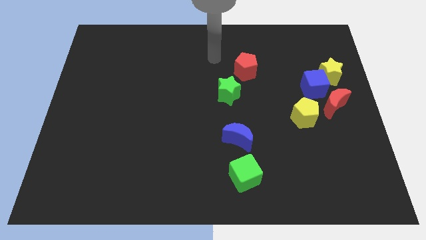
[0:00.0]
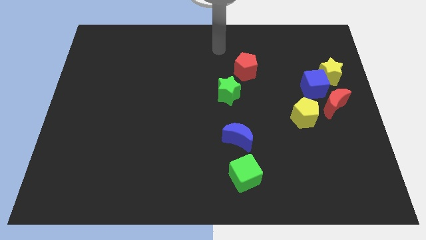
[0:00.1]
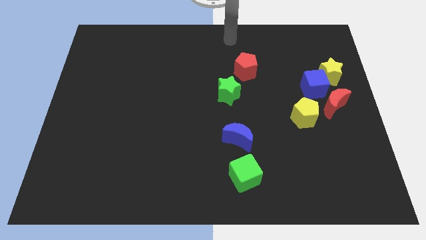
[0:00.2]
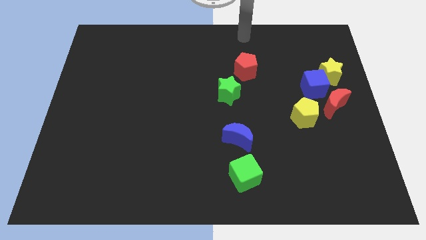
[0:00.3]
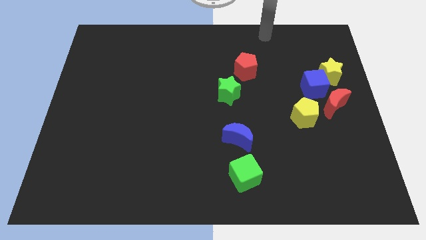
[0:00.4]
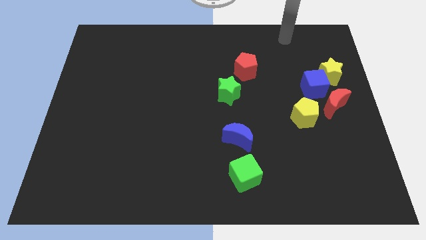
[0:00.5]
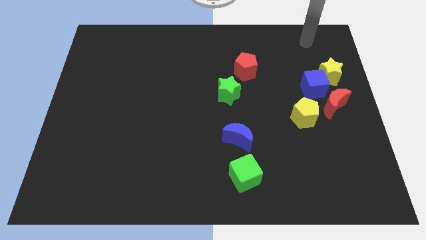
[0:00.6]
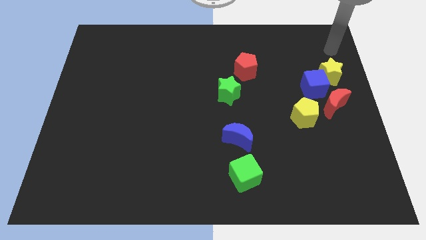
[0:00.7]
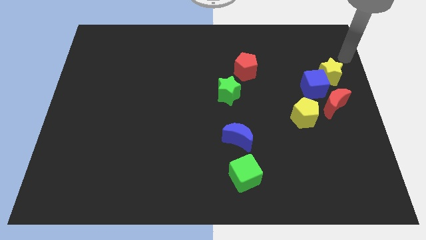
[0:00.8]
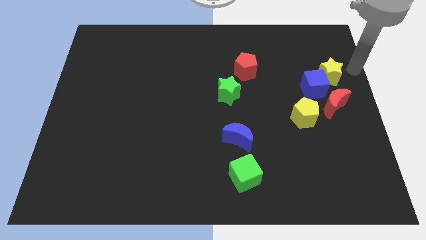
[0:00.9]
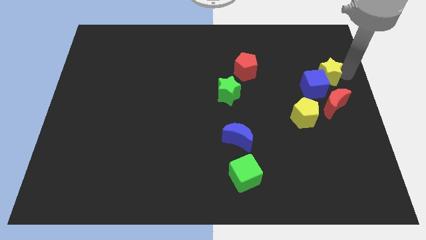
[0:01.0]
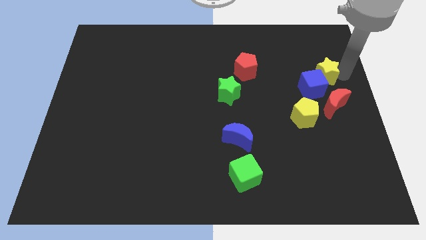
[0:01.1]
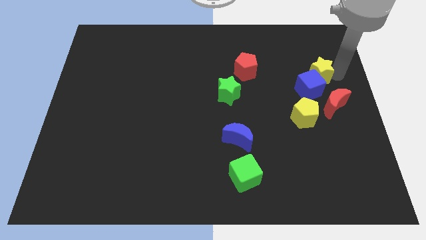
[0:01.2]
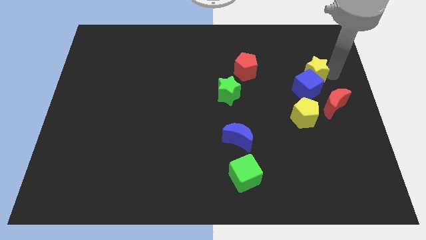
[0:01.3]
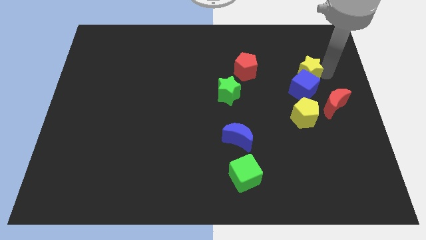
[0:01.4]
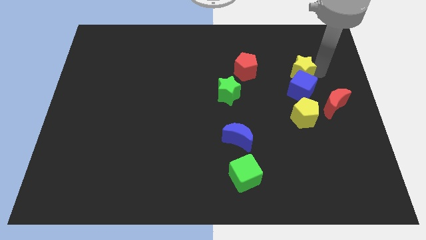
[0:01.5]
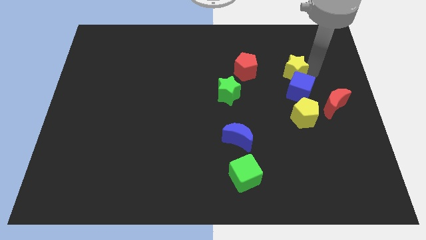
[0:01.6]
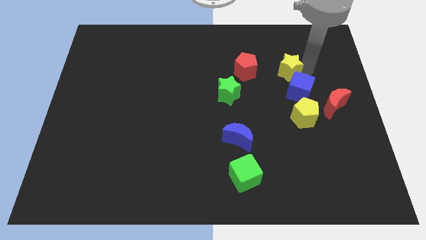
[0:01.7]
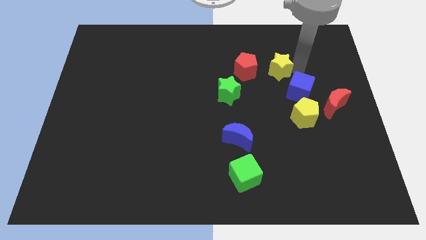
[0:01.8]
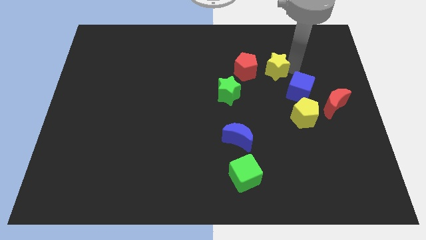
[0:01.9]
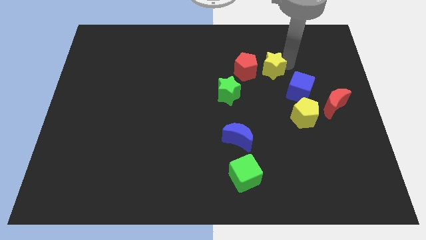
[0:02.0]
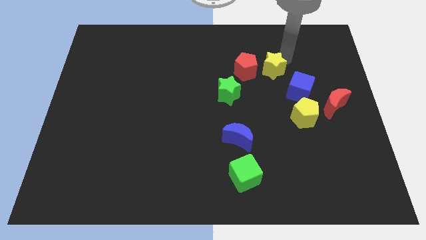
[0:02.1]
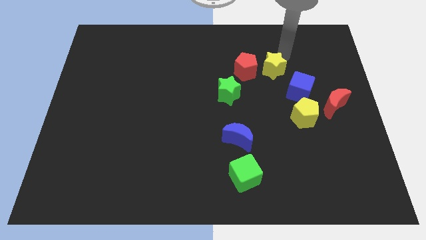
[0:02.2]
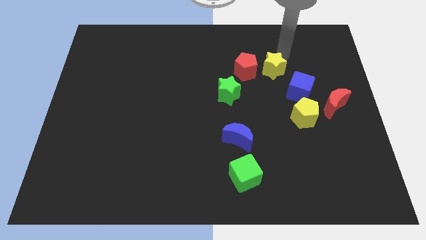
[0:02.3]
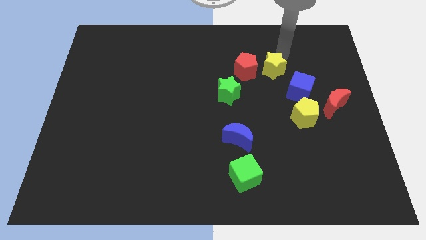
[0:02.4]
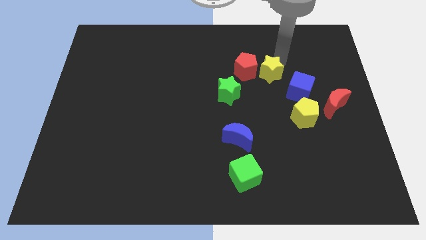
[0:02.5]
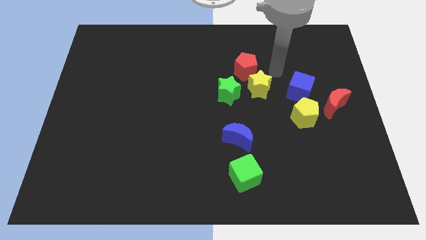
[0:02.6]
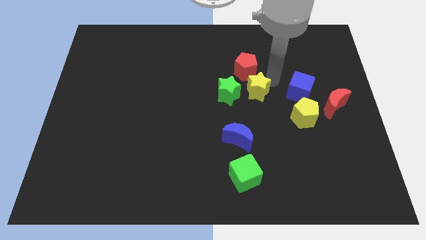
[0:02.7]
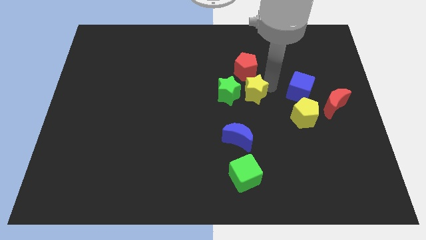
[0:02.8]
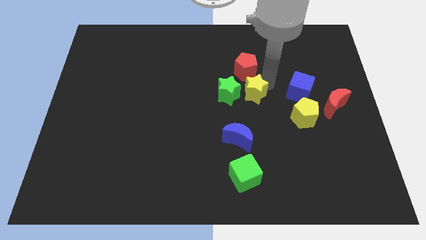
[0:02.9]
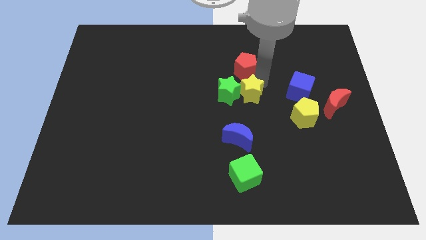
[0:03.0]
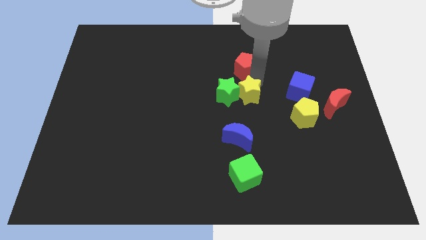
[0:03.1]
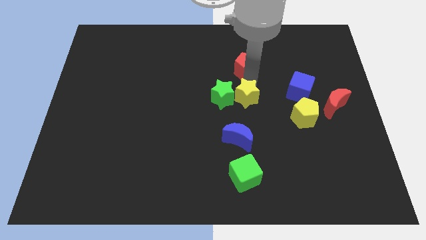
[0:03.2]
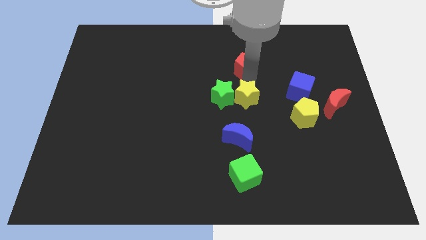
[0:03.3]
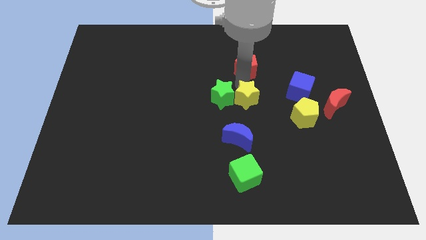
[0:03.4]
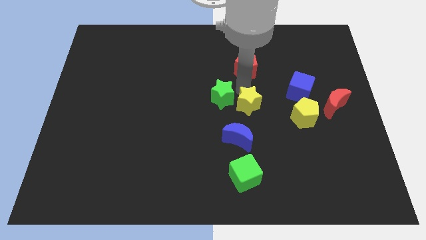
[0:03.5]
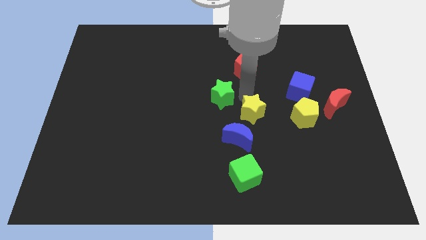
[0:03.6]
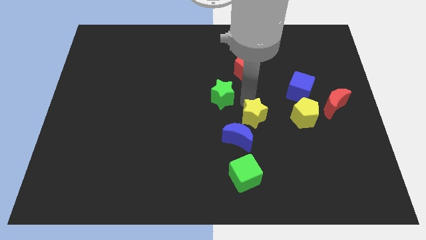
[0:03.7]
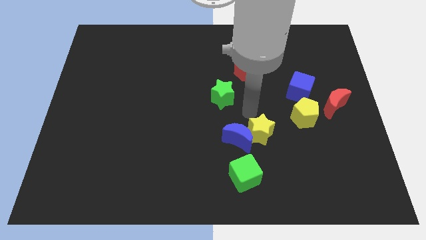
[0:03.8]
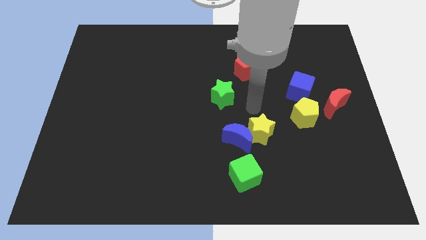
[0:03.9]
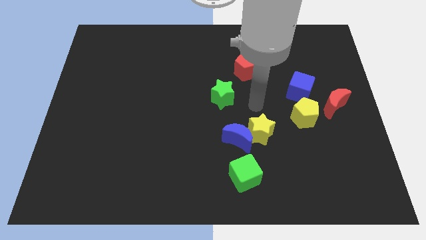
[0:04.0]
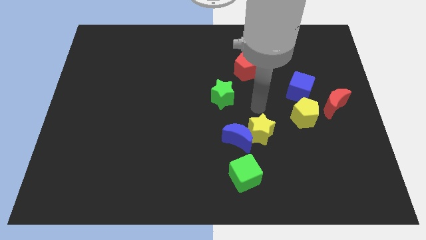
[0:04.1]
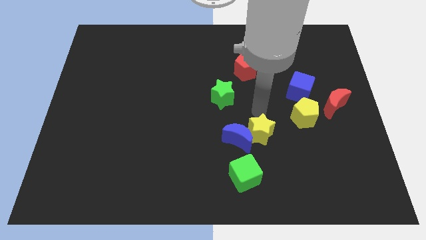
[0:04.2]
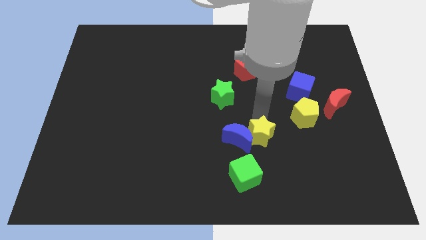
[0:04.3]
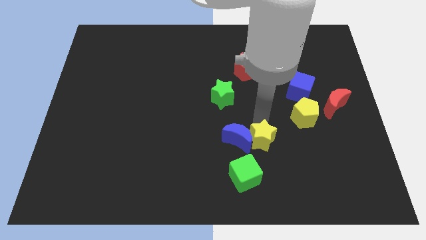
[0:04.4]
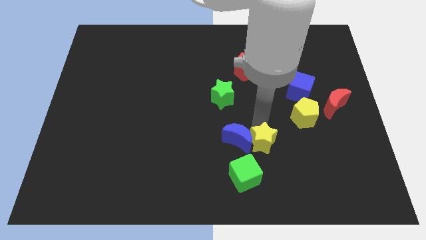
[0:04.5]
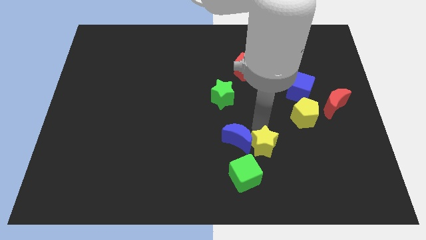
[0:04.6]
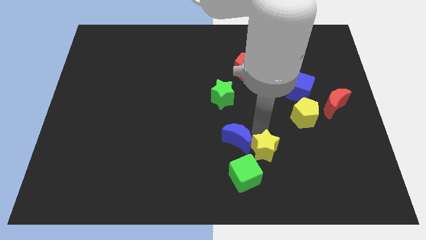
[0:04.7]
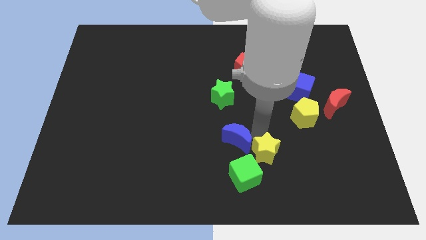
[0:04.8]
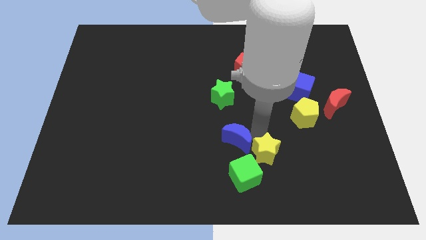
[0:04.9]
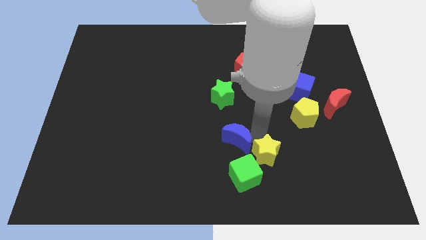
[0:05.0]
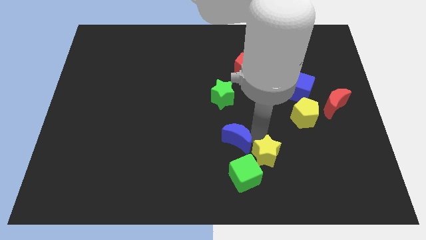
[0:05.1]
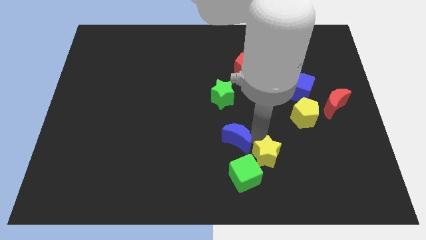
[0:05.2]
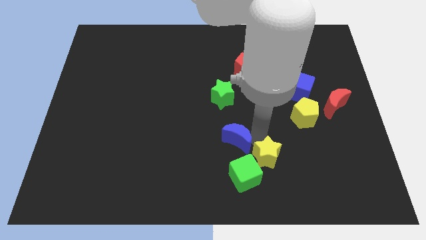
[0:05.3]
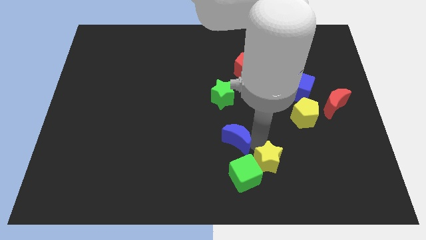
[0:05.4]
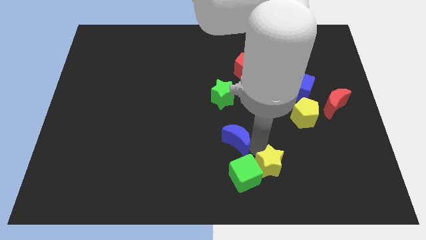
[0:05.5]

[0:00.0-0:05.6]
push the yellow star next to the green cube

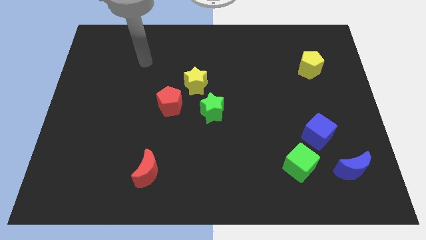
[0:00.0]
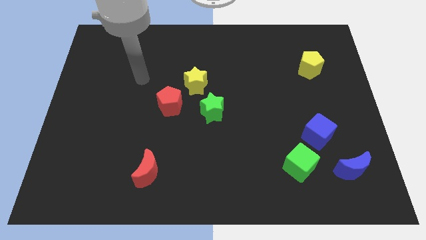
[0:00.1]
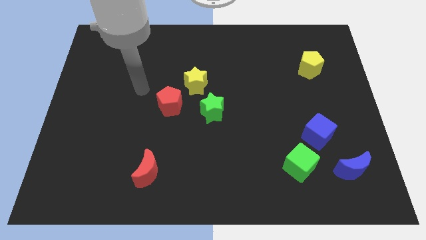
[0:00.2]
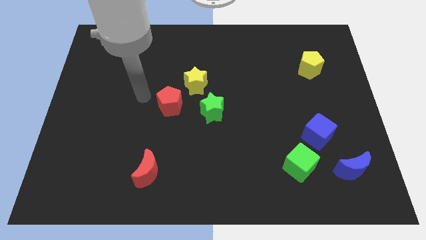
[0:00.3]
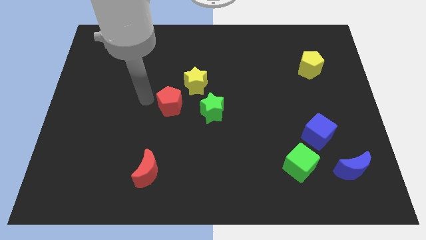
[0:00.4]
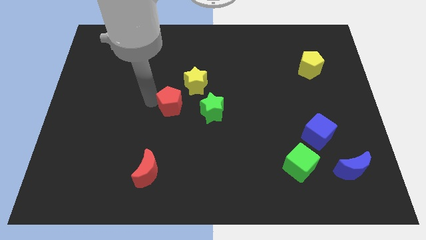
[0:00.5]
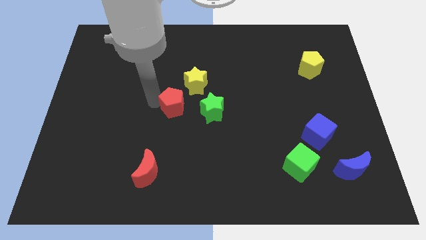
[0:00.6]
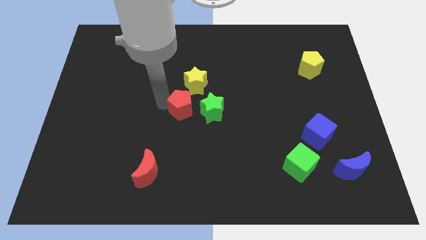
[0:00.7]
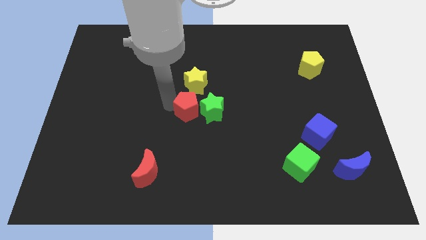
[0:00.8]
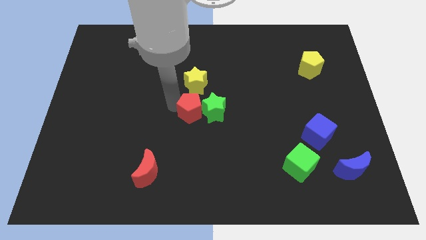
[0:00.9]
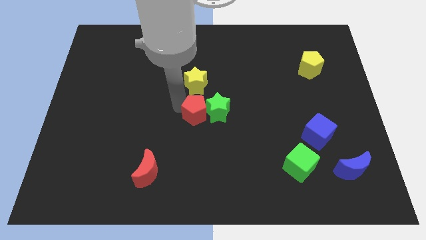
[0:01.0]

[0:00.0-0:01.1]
push the red pentagon close to the green star

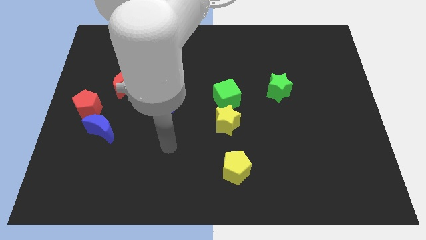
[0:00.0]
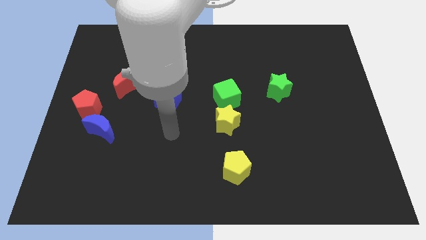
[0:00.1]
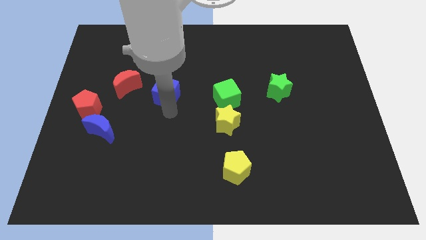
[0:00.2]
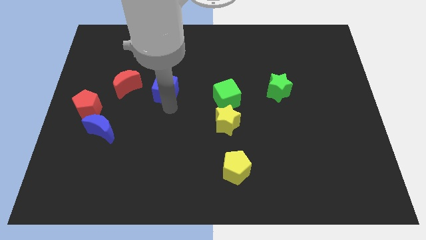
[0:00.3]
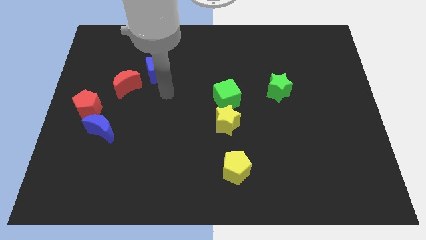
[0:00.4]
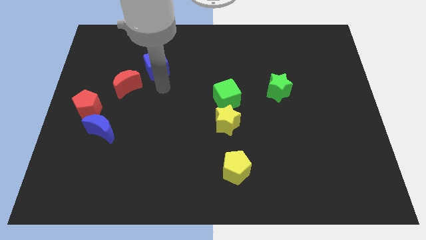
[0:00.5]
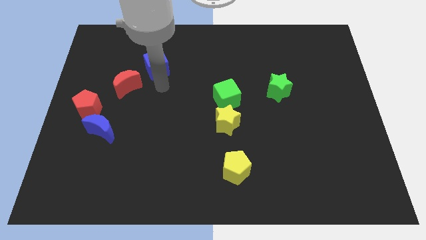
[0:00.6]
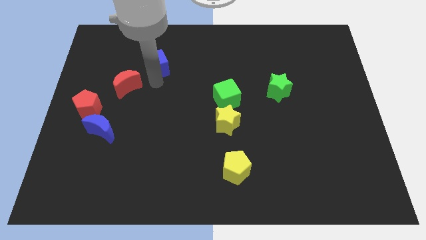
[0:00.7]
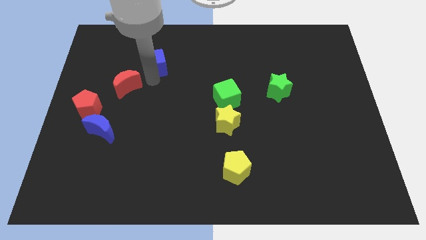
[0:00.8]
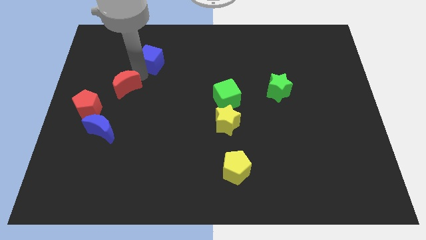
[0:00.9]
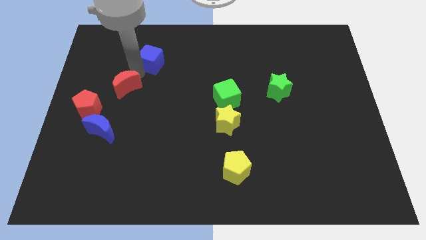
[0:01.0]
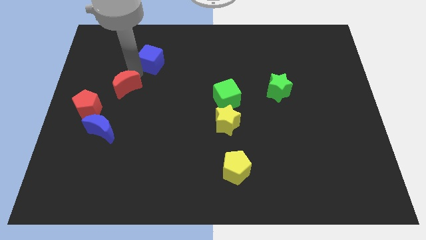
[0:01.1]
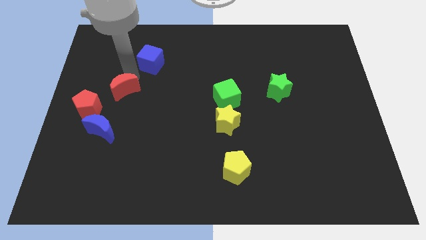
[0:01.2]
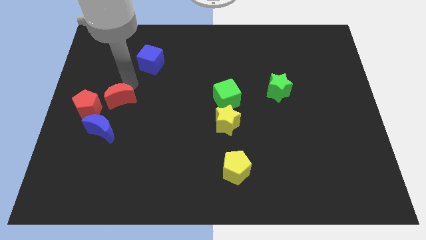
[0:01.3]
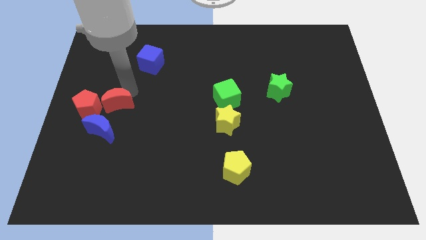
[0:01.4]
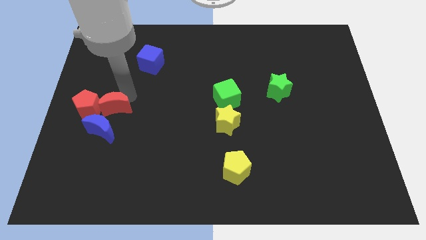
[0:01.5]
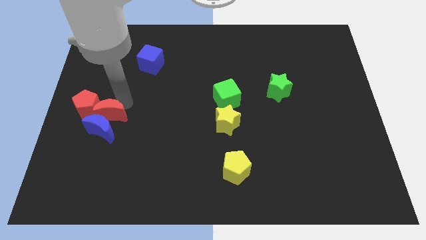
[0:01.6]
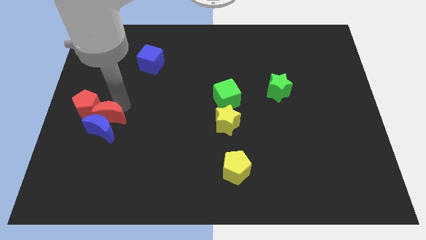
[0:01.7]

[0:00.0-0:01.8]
move the red moon towards the blue moon
